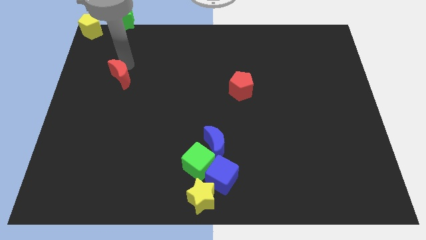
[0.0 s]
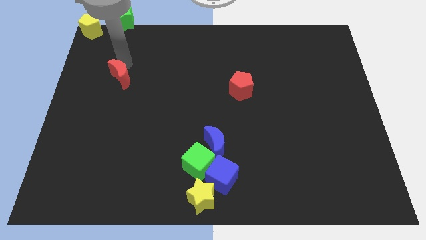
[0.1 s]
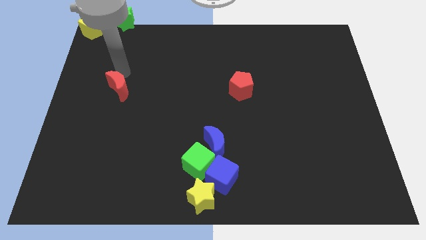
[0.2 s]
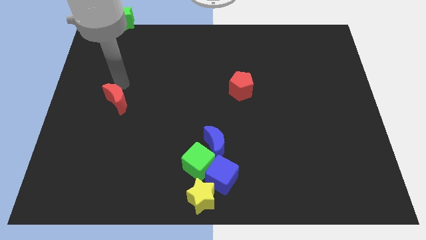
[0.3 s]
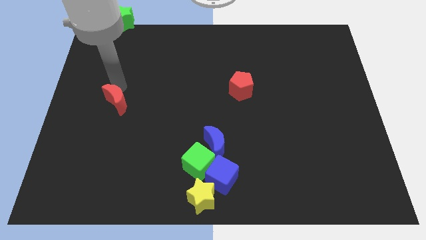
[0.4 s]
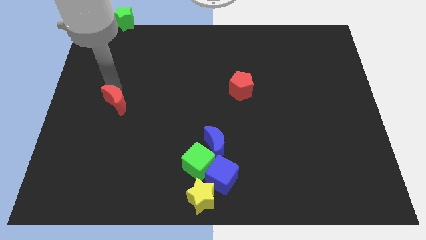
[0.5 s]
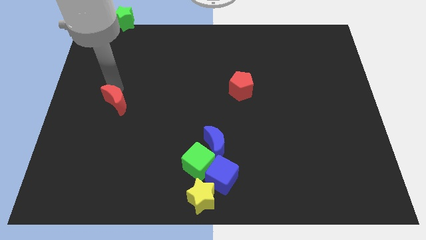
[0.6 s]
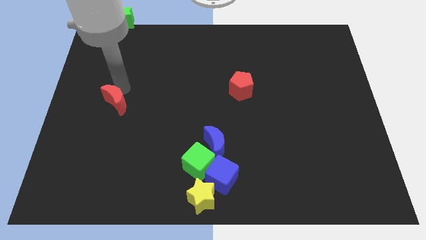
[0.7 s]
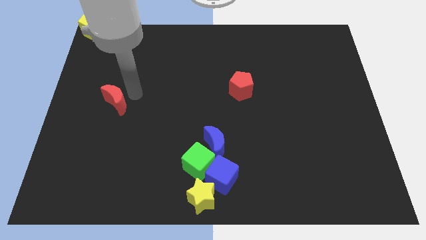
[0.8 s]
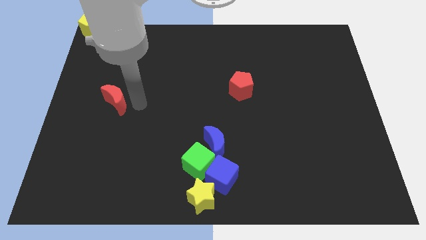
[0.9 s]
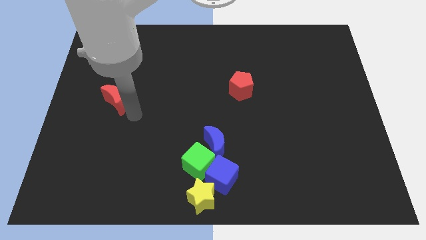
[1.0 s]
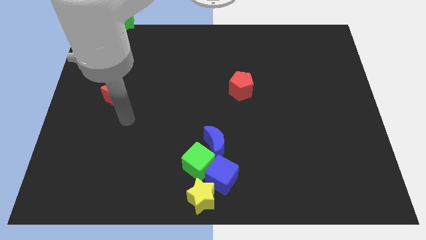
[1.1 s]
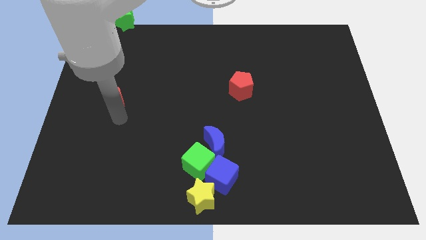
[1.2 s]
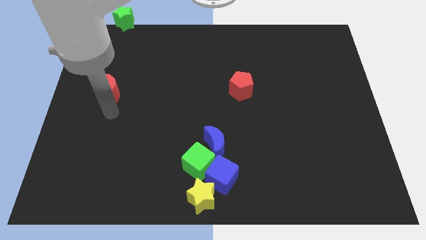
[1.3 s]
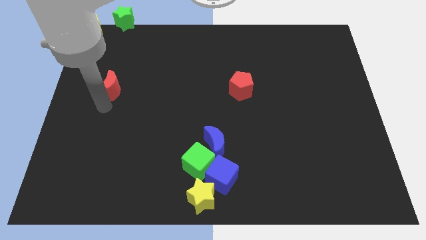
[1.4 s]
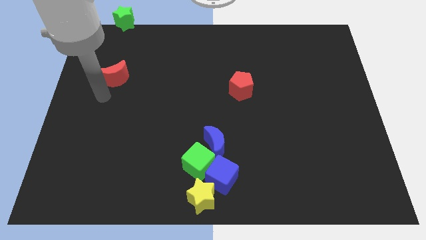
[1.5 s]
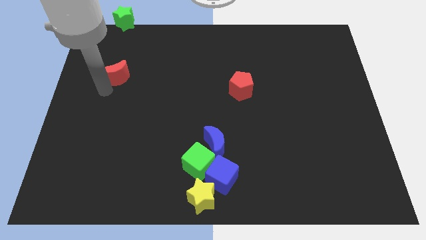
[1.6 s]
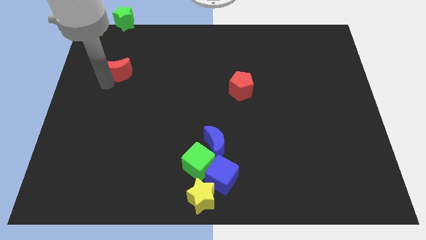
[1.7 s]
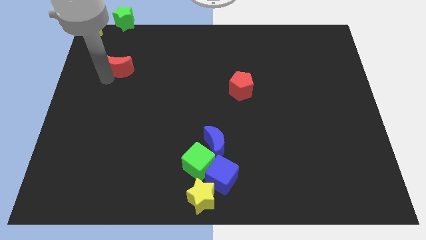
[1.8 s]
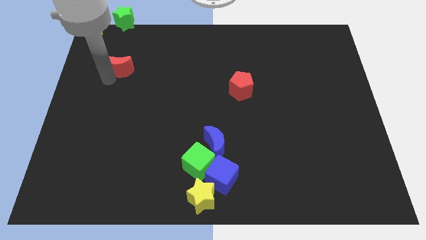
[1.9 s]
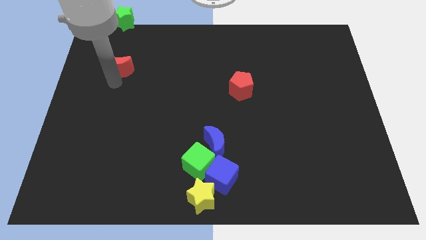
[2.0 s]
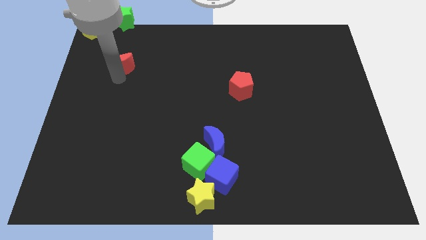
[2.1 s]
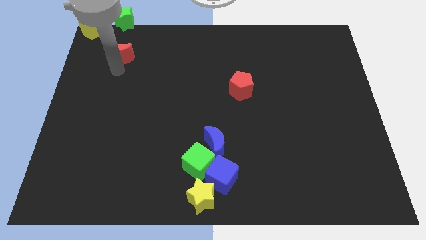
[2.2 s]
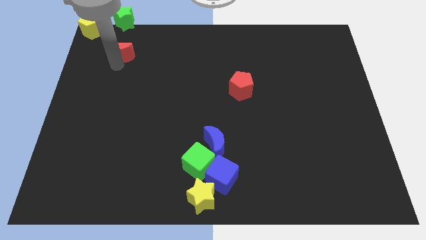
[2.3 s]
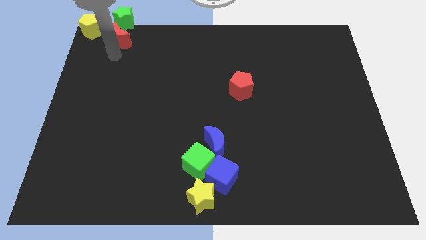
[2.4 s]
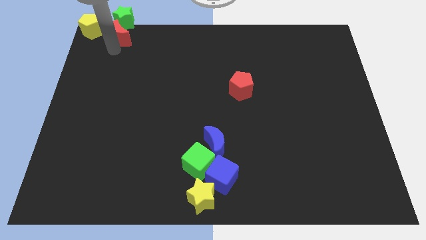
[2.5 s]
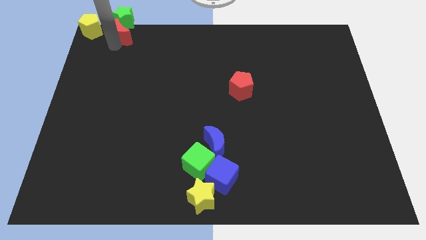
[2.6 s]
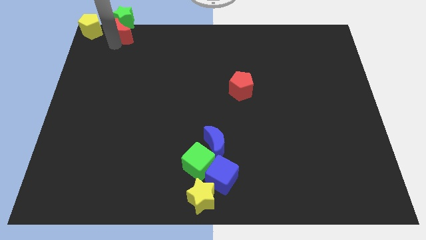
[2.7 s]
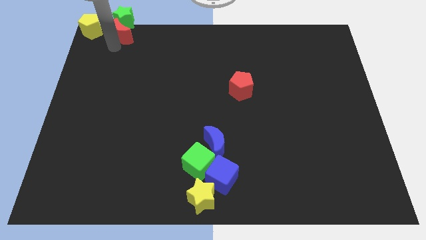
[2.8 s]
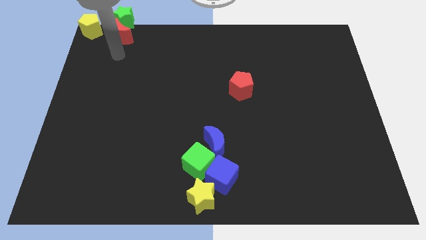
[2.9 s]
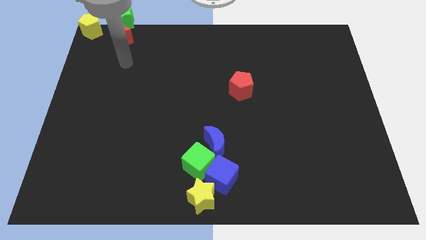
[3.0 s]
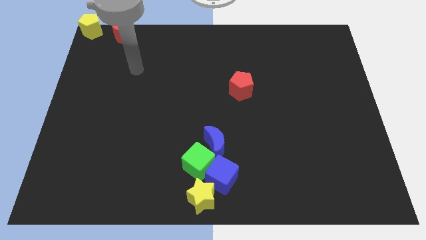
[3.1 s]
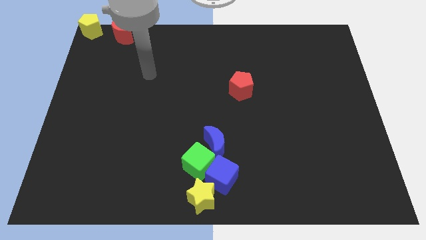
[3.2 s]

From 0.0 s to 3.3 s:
push the red crescent to the bottom of the green star

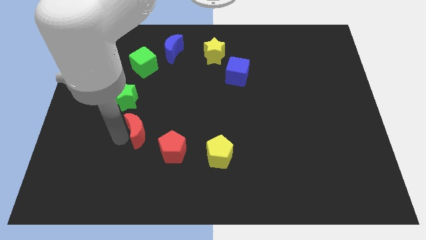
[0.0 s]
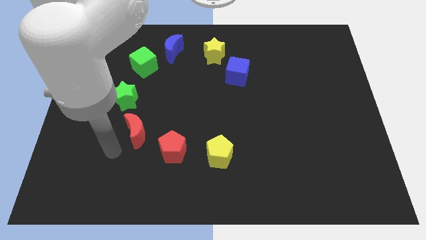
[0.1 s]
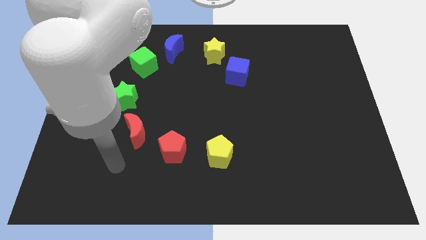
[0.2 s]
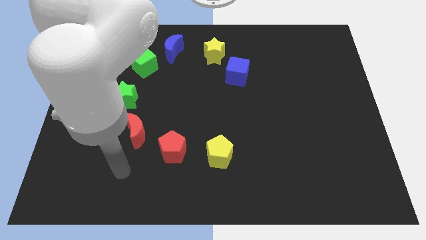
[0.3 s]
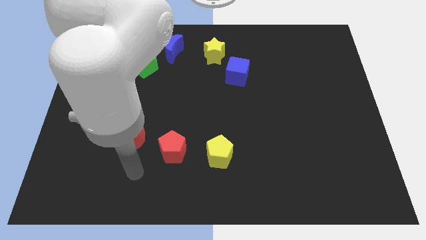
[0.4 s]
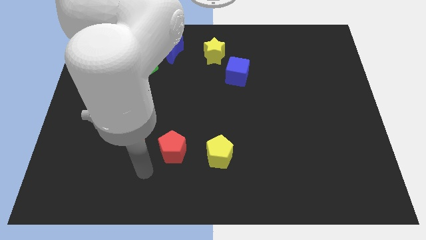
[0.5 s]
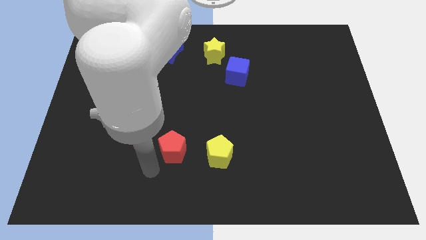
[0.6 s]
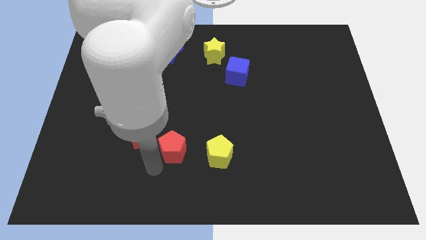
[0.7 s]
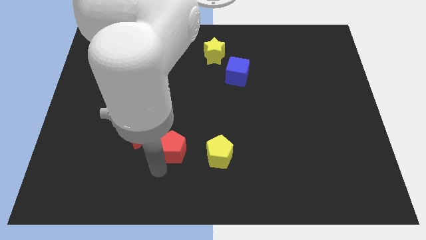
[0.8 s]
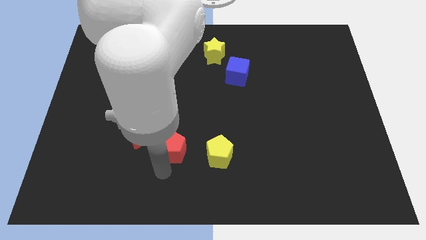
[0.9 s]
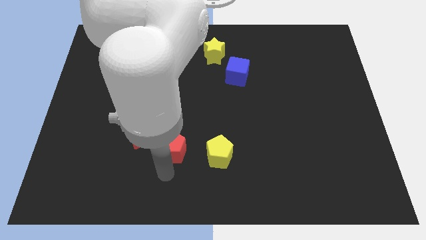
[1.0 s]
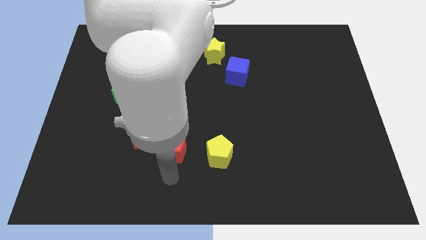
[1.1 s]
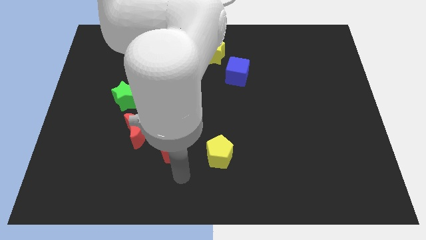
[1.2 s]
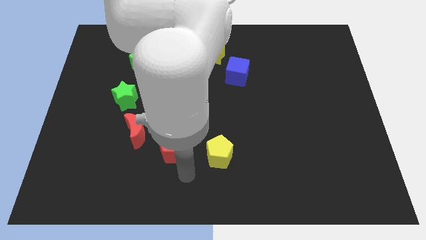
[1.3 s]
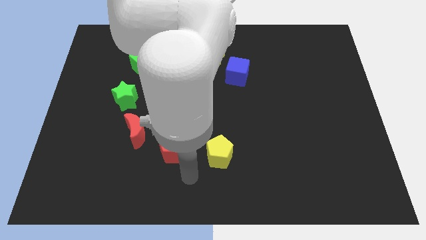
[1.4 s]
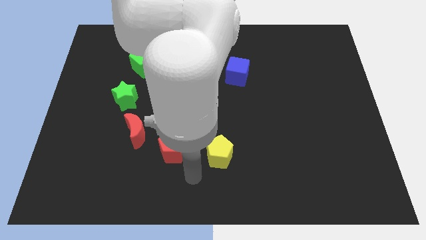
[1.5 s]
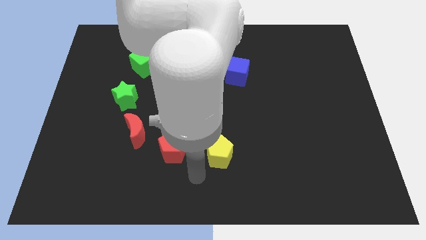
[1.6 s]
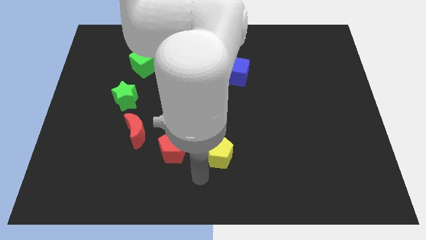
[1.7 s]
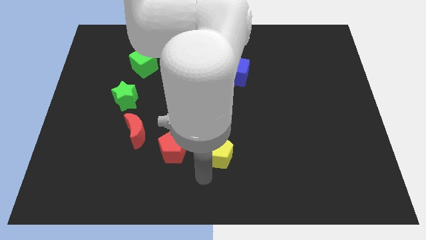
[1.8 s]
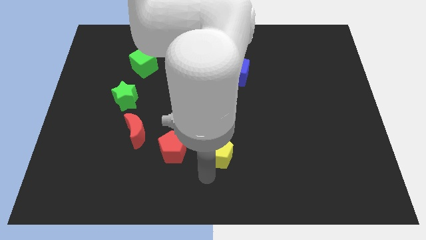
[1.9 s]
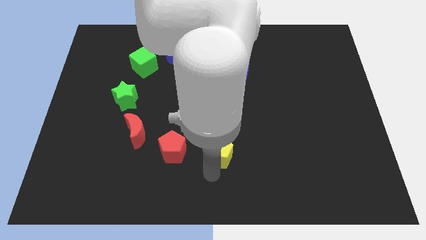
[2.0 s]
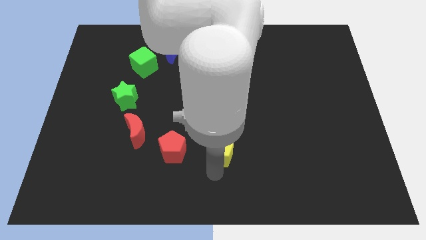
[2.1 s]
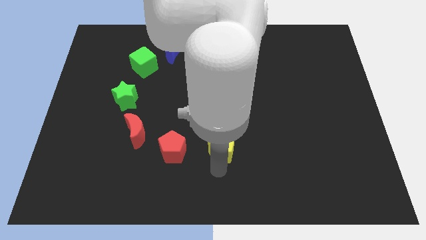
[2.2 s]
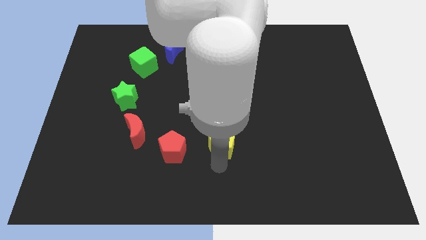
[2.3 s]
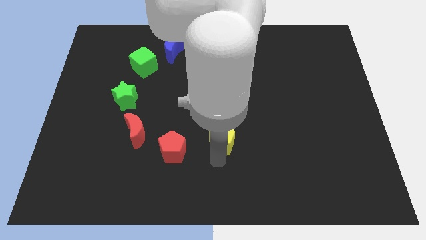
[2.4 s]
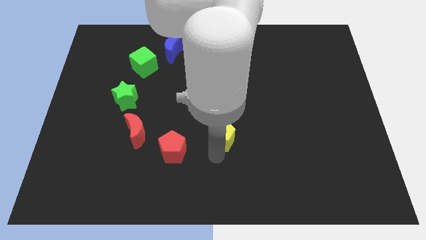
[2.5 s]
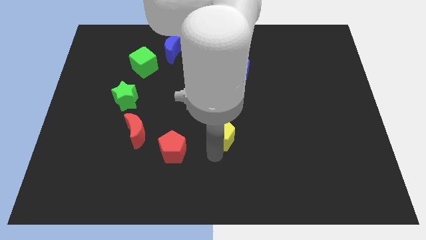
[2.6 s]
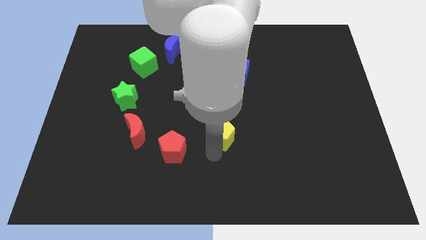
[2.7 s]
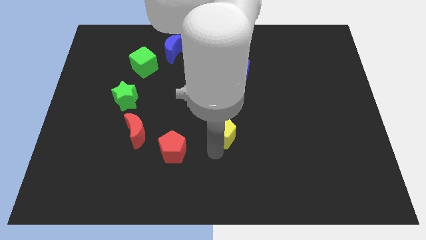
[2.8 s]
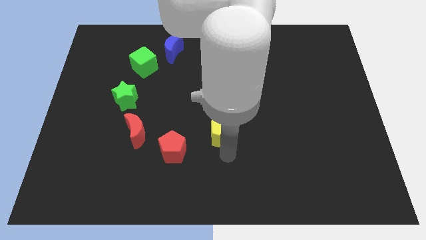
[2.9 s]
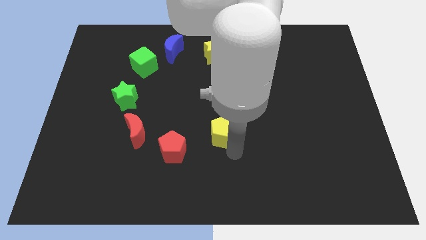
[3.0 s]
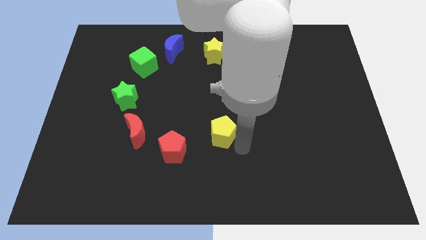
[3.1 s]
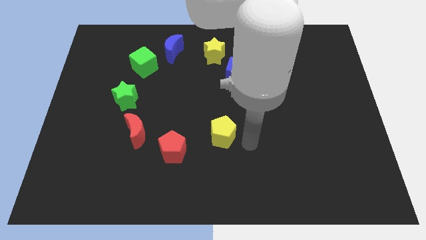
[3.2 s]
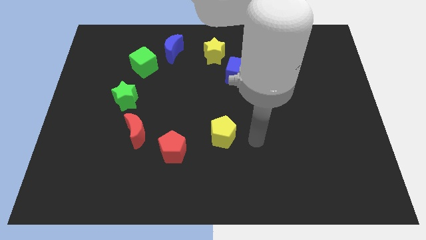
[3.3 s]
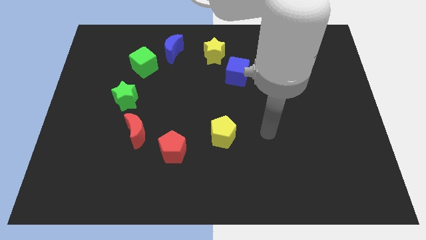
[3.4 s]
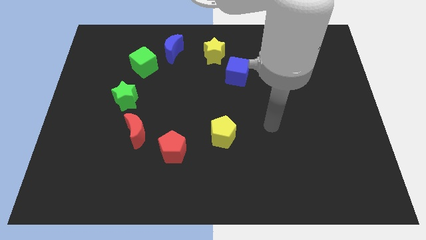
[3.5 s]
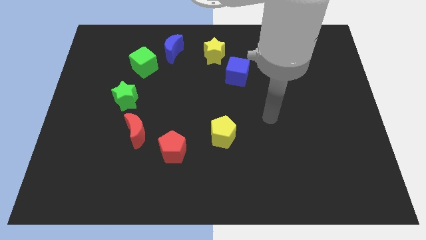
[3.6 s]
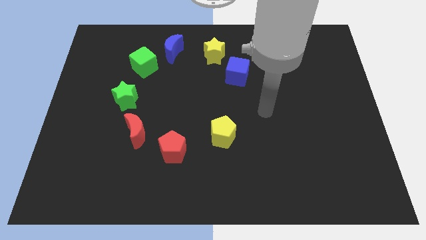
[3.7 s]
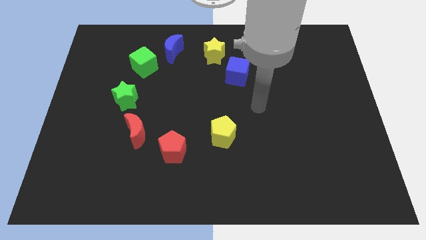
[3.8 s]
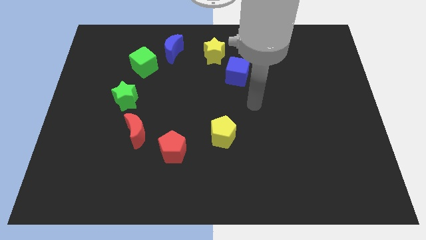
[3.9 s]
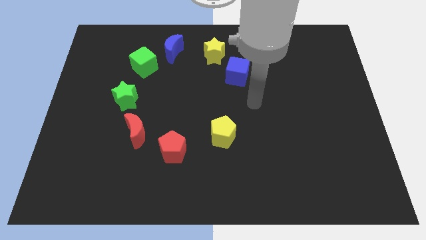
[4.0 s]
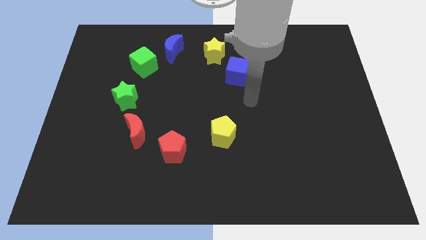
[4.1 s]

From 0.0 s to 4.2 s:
move yellow pentagon slightly upwards

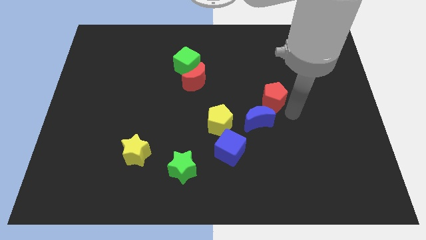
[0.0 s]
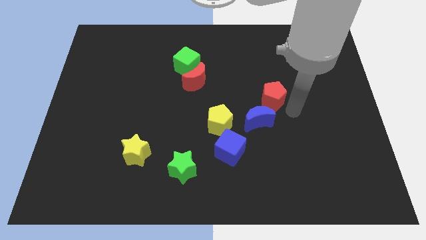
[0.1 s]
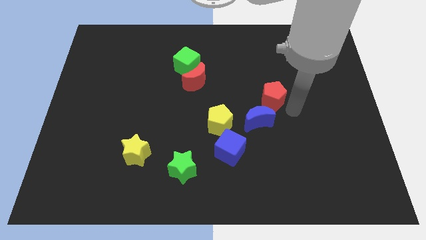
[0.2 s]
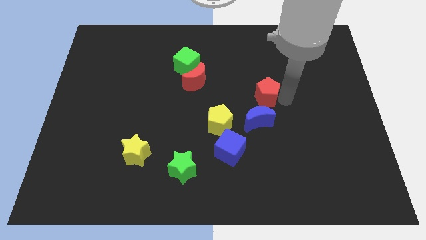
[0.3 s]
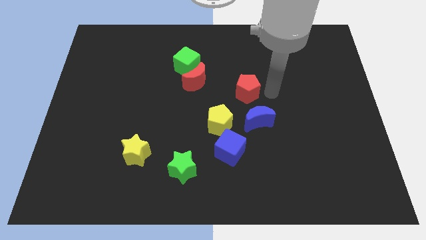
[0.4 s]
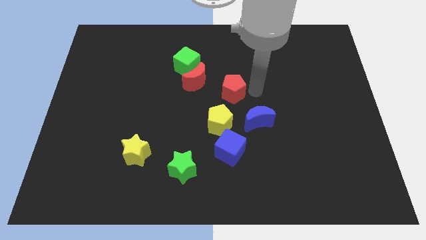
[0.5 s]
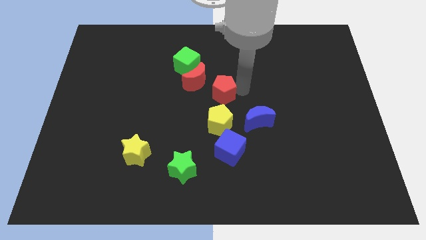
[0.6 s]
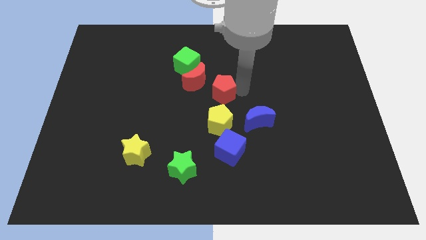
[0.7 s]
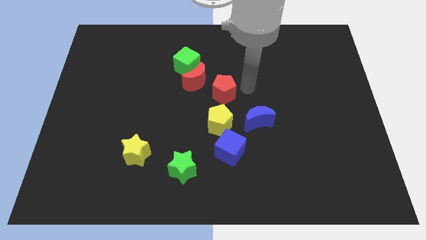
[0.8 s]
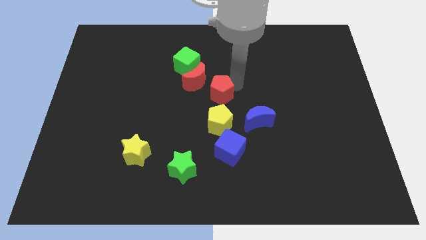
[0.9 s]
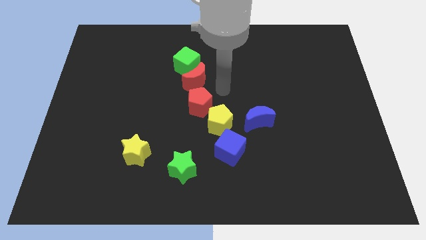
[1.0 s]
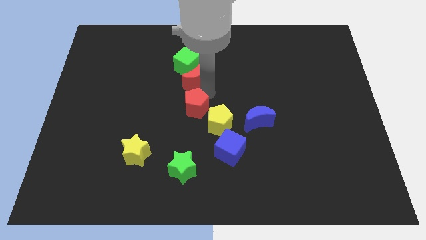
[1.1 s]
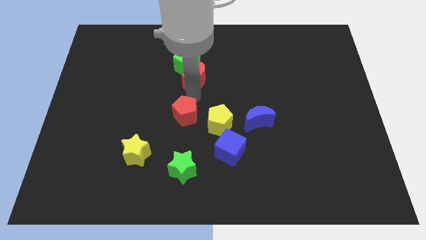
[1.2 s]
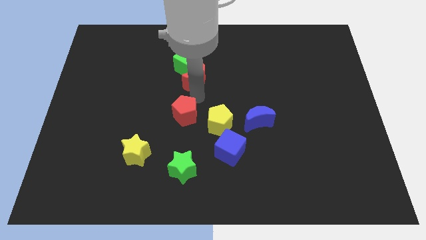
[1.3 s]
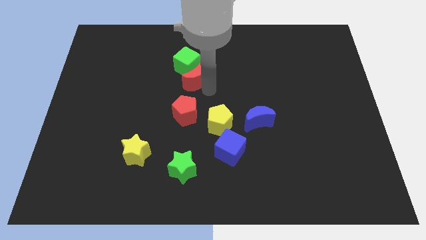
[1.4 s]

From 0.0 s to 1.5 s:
move the red pentagon diagonally top left to the yellow pentagon
